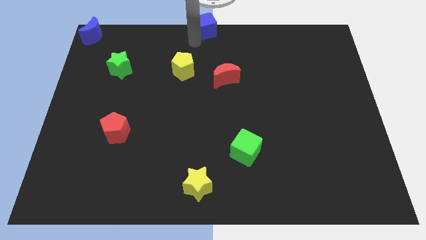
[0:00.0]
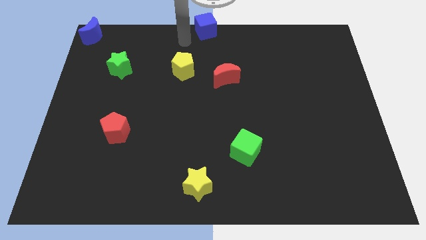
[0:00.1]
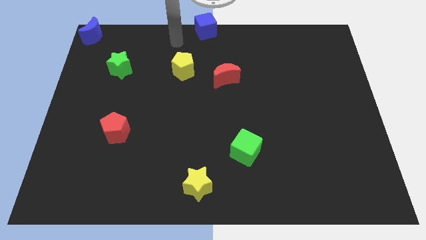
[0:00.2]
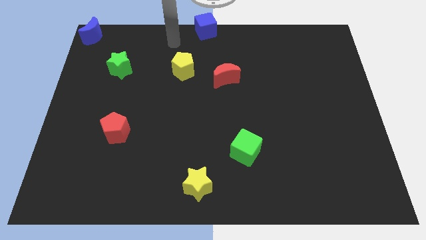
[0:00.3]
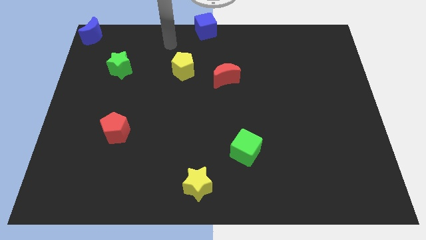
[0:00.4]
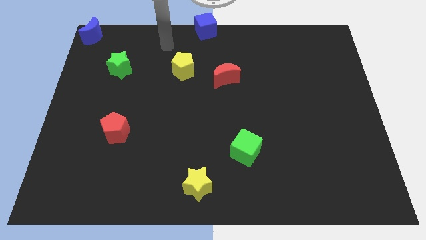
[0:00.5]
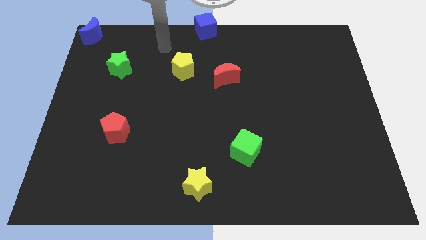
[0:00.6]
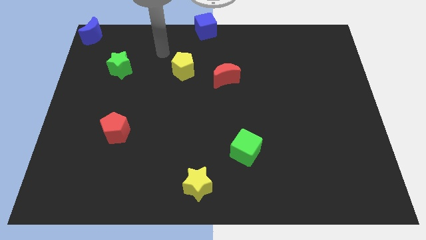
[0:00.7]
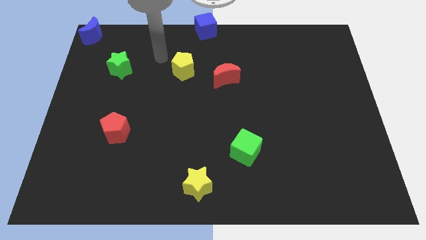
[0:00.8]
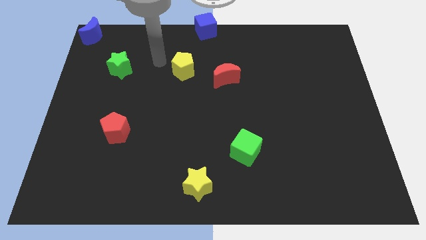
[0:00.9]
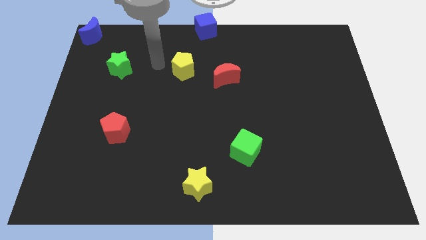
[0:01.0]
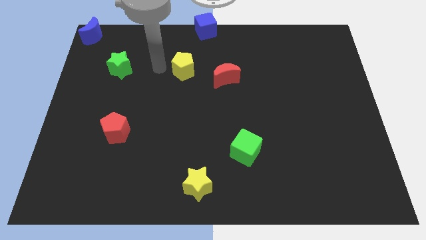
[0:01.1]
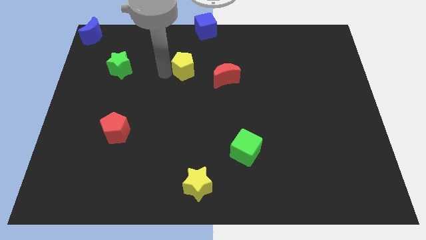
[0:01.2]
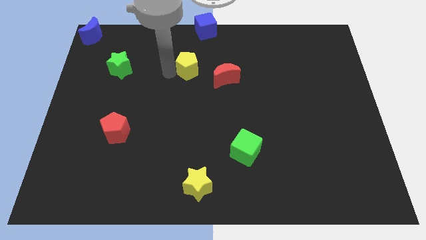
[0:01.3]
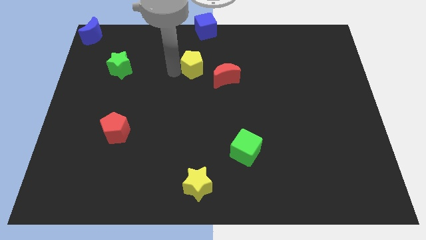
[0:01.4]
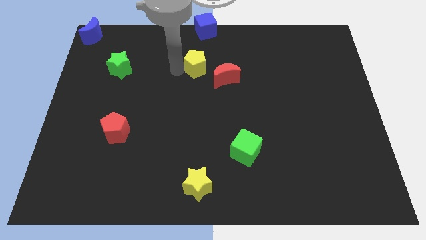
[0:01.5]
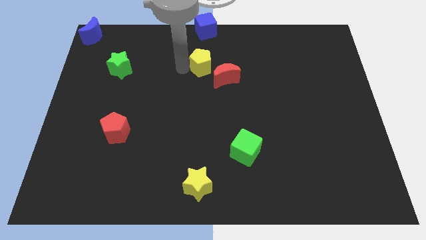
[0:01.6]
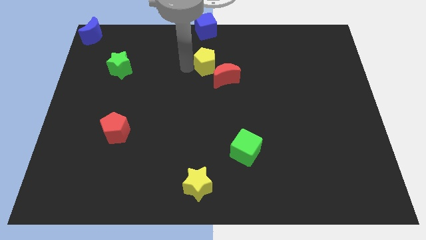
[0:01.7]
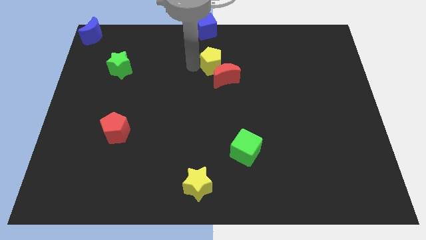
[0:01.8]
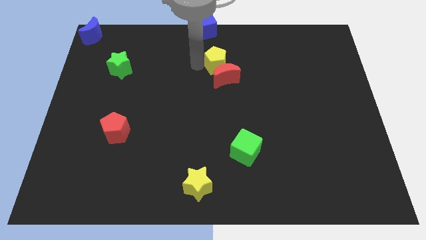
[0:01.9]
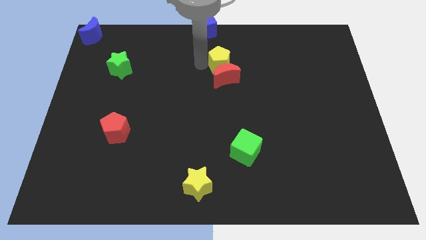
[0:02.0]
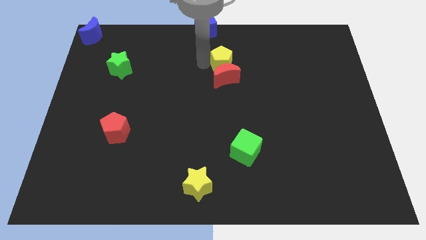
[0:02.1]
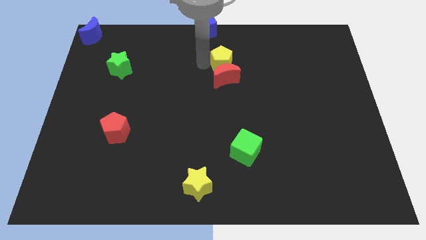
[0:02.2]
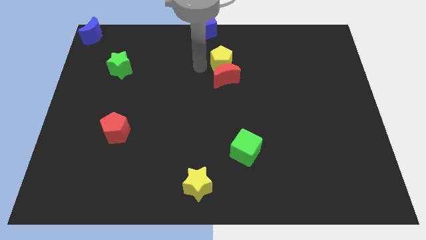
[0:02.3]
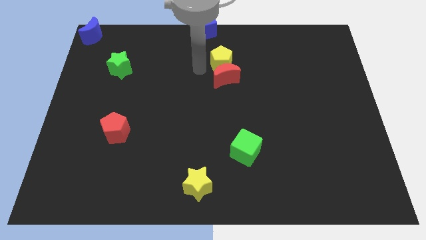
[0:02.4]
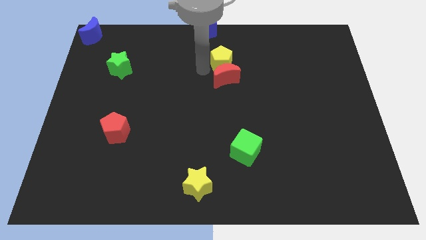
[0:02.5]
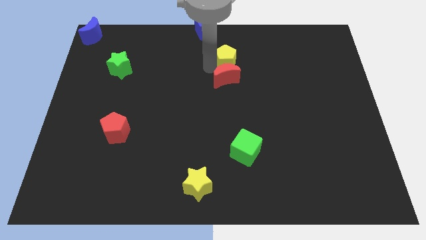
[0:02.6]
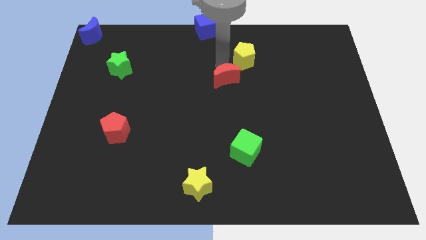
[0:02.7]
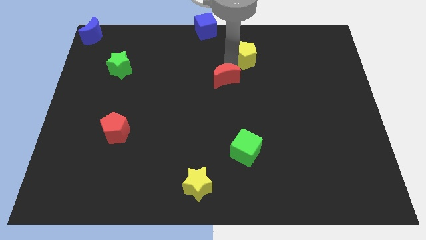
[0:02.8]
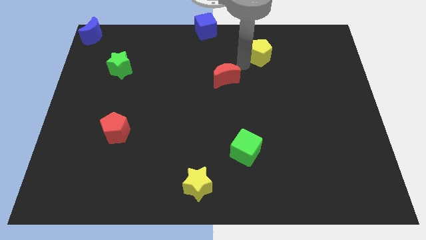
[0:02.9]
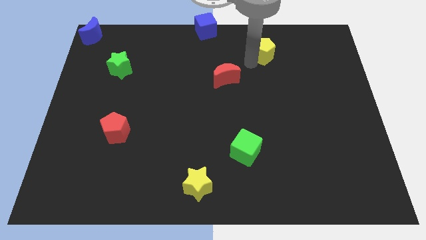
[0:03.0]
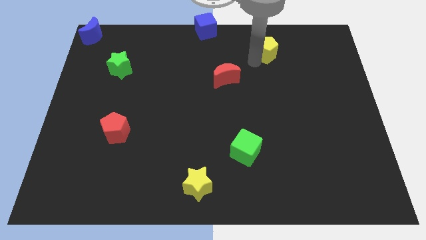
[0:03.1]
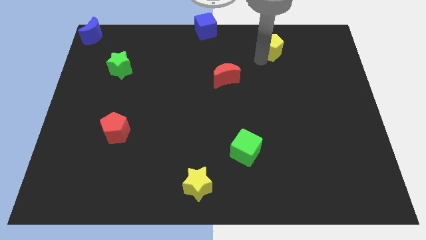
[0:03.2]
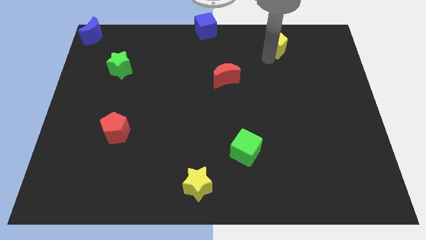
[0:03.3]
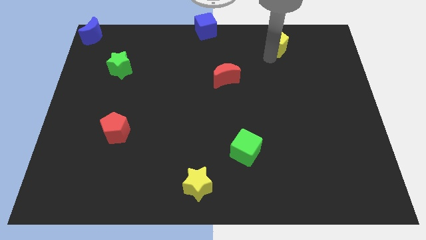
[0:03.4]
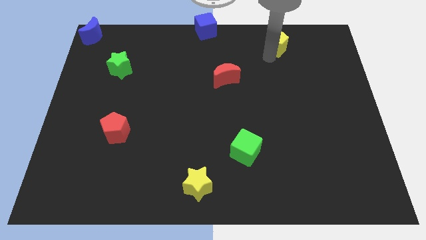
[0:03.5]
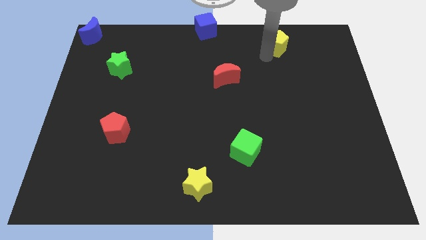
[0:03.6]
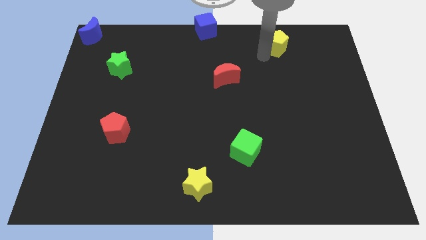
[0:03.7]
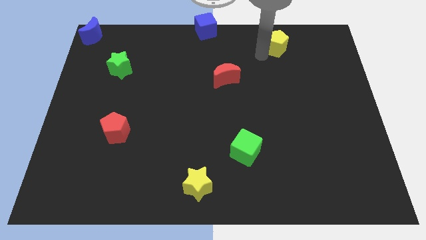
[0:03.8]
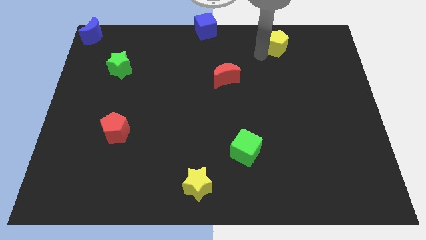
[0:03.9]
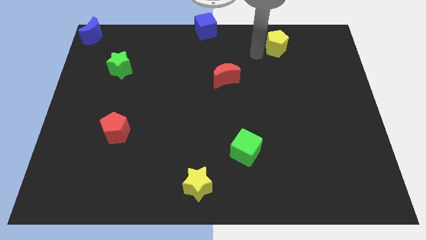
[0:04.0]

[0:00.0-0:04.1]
move the yellow pentagon at the top right side of the red moon

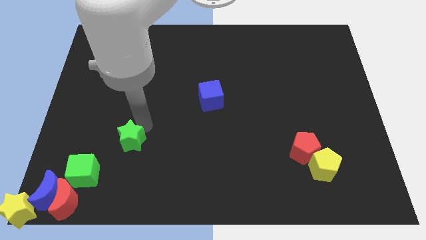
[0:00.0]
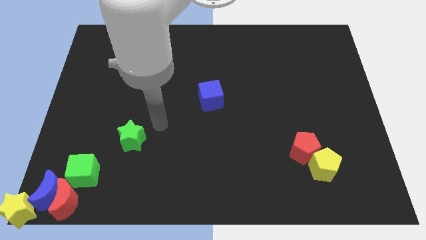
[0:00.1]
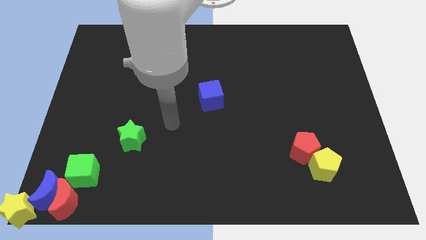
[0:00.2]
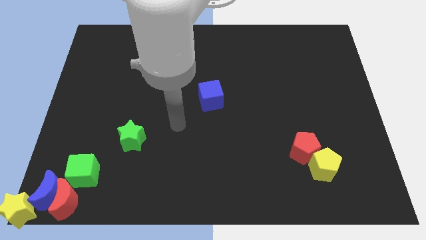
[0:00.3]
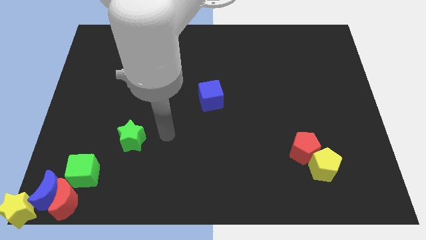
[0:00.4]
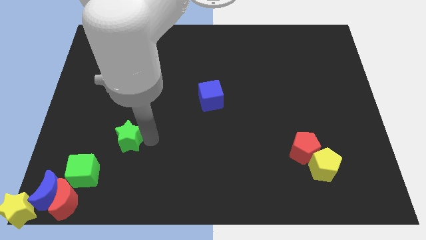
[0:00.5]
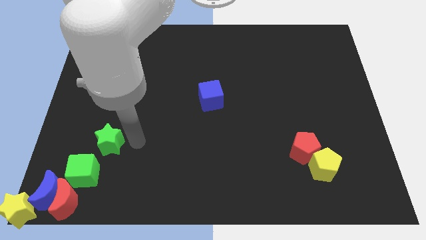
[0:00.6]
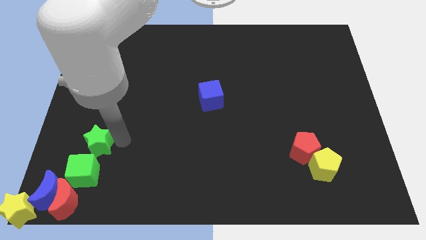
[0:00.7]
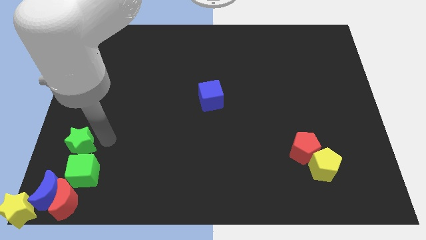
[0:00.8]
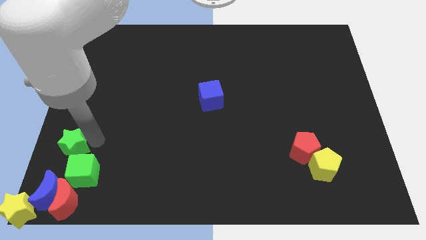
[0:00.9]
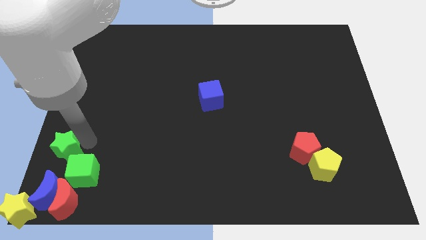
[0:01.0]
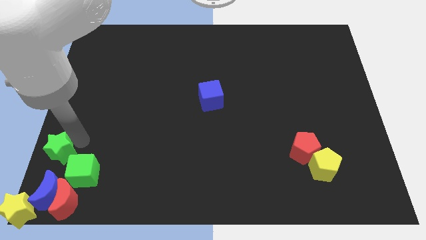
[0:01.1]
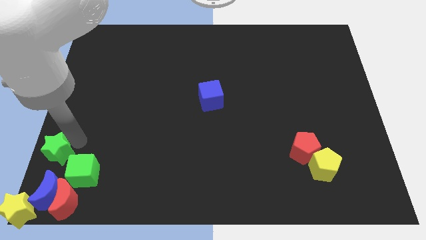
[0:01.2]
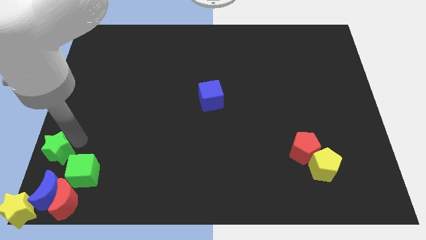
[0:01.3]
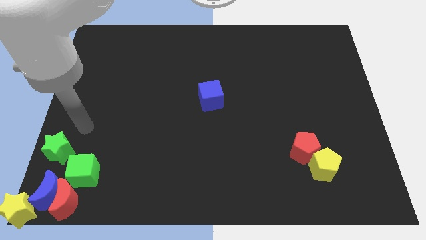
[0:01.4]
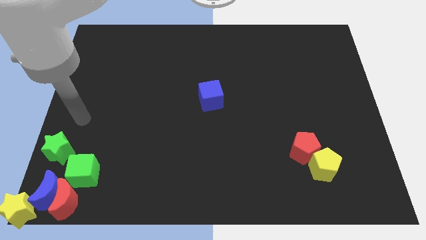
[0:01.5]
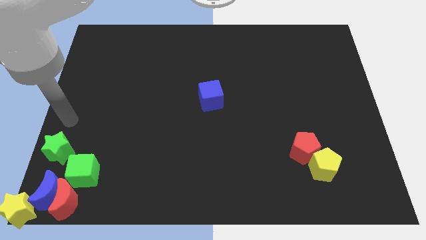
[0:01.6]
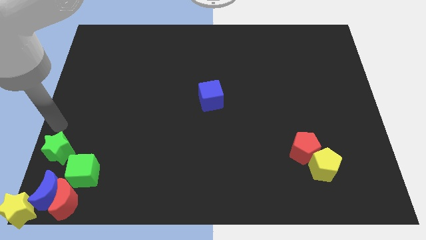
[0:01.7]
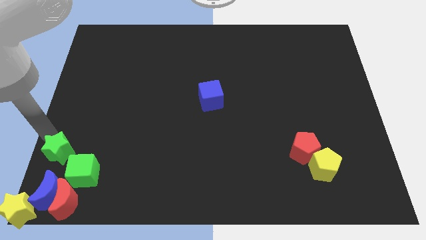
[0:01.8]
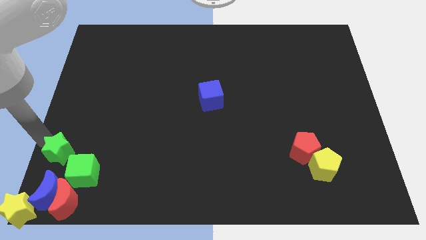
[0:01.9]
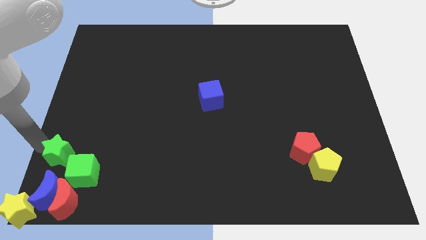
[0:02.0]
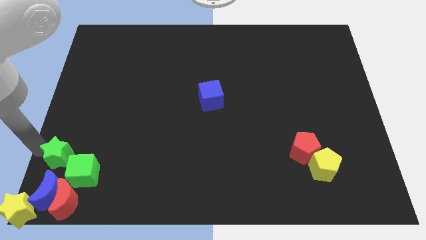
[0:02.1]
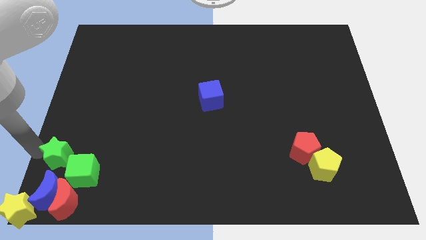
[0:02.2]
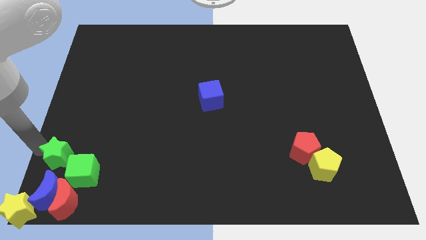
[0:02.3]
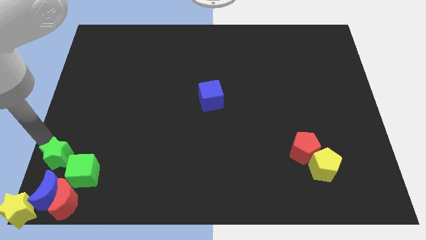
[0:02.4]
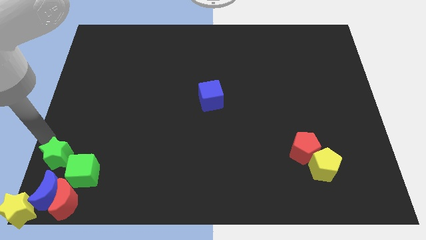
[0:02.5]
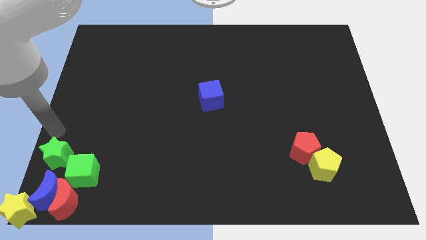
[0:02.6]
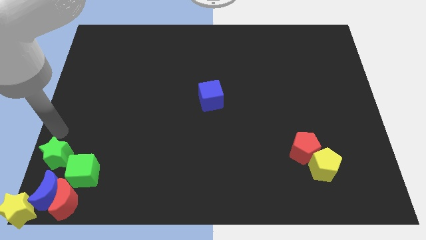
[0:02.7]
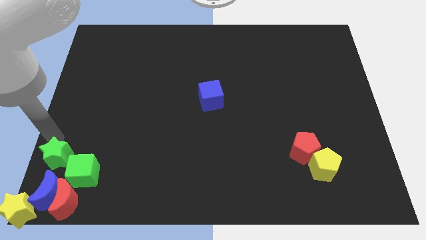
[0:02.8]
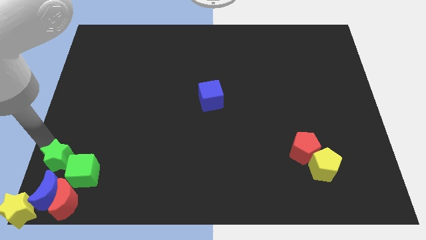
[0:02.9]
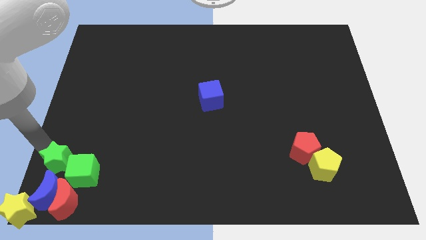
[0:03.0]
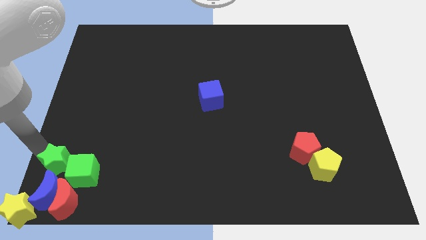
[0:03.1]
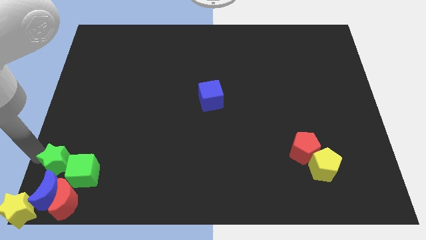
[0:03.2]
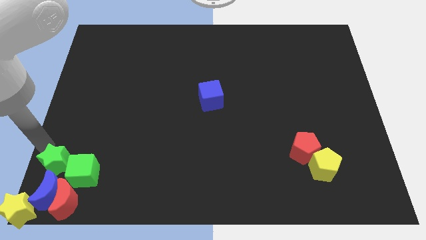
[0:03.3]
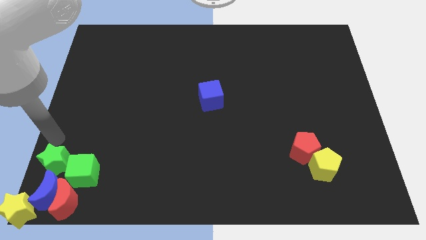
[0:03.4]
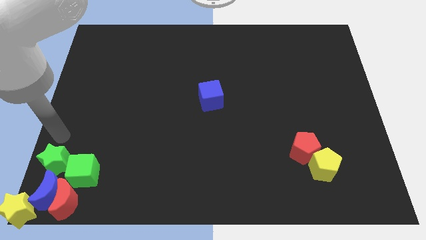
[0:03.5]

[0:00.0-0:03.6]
move the green star to the top left side of the green cube

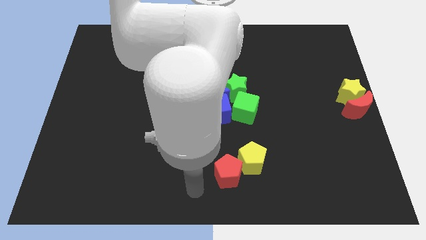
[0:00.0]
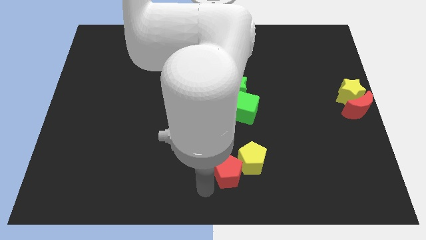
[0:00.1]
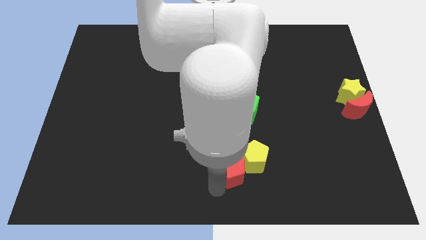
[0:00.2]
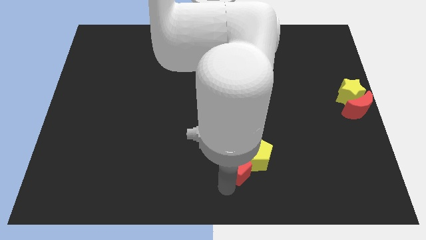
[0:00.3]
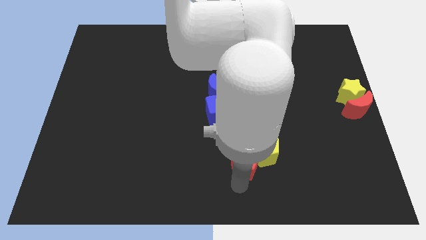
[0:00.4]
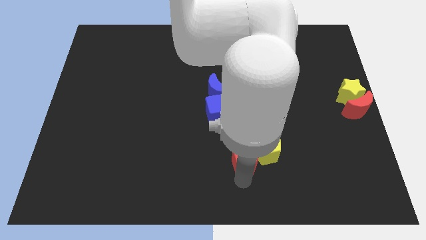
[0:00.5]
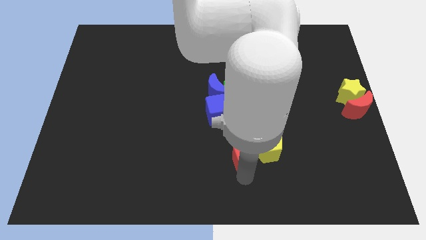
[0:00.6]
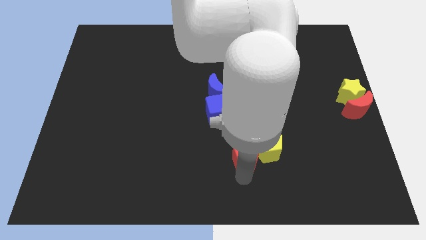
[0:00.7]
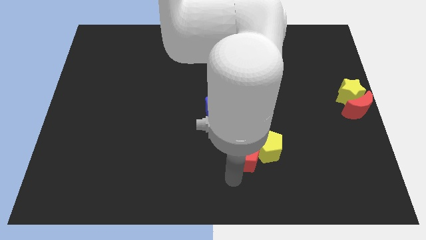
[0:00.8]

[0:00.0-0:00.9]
push the red pentagon along with the yellow pentagon slightly towards the top right of the board

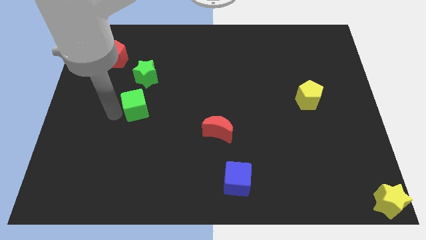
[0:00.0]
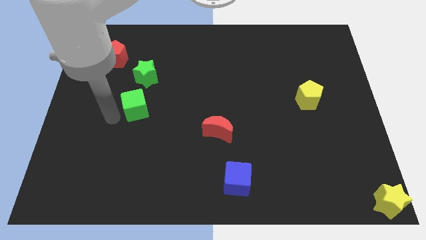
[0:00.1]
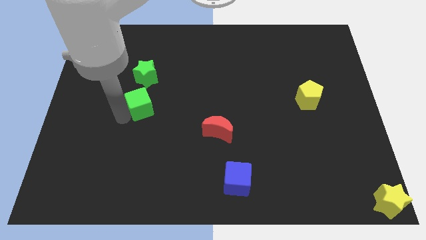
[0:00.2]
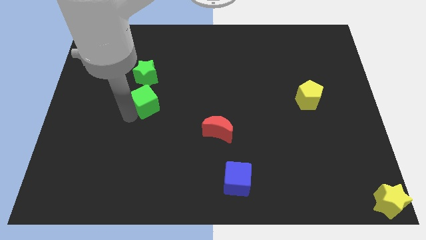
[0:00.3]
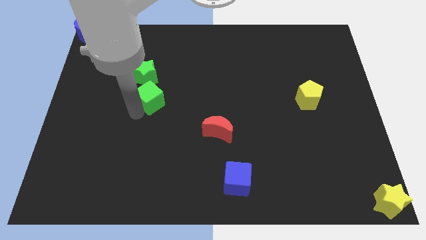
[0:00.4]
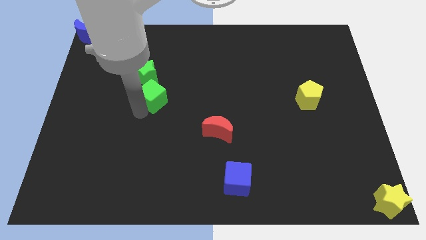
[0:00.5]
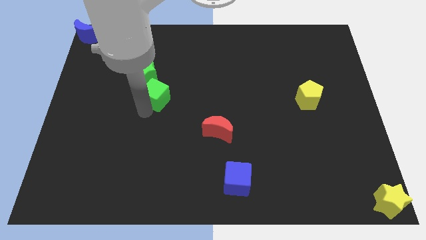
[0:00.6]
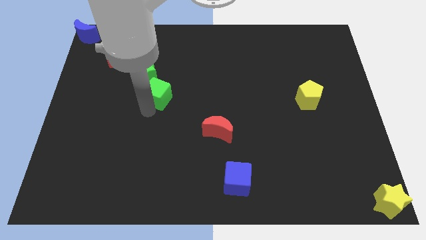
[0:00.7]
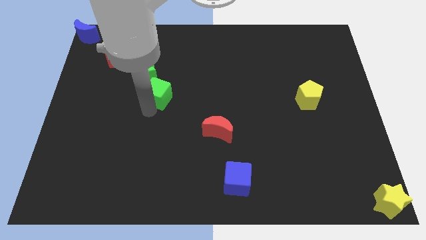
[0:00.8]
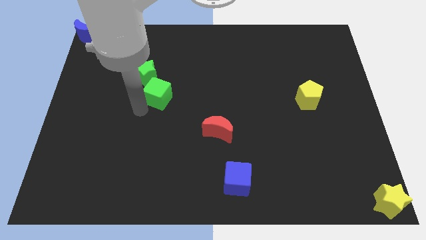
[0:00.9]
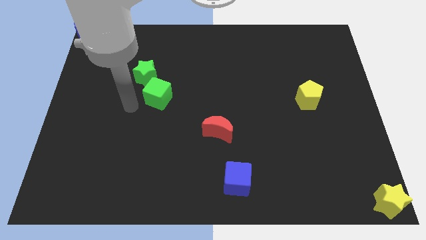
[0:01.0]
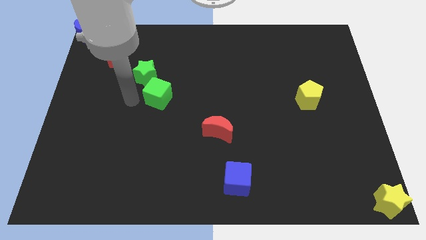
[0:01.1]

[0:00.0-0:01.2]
place green cube down to the green star
